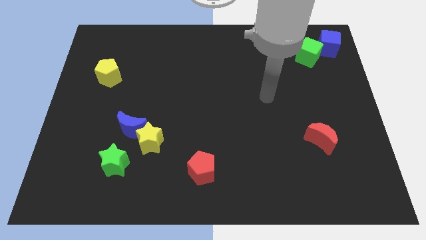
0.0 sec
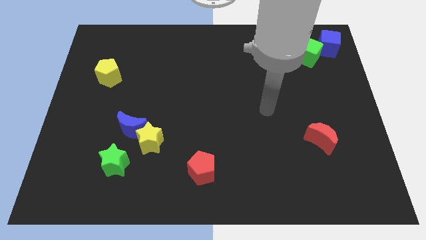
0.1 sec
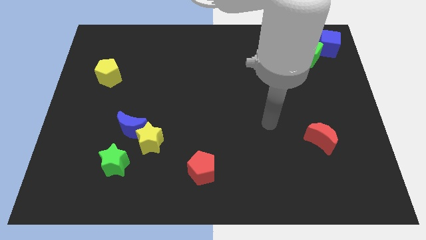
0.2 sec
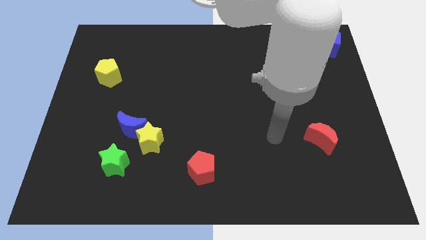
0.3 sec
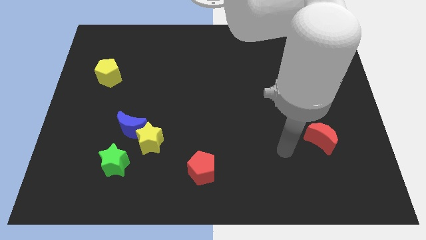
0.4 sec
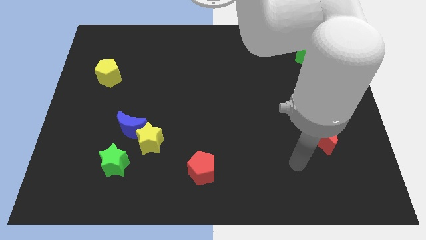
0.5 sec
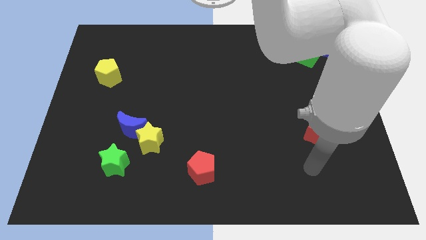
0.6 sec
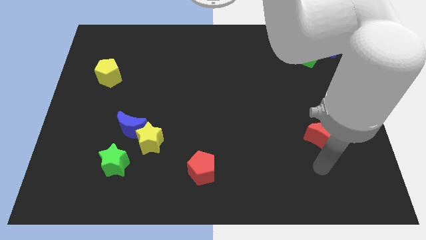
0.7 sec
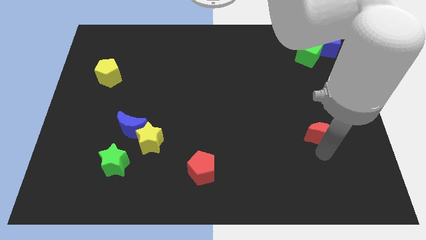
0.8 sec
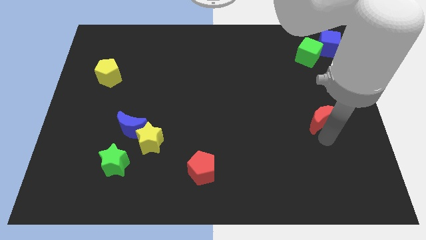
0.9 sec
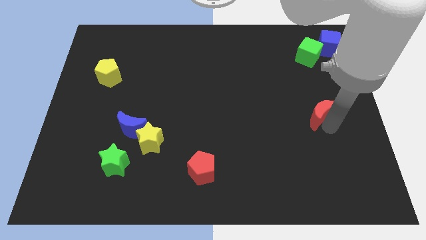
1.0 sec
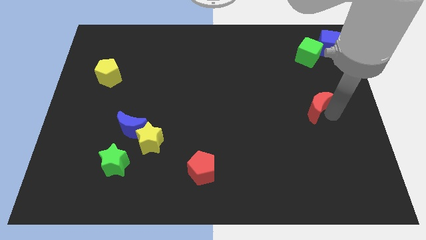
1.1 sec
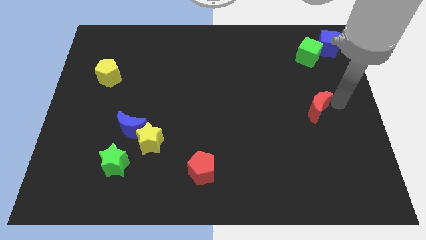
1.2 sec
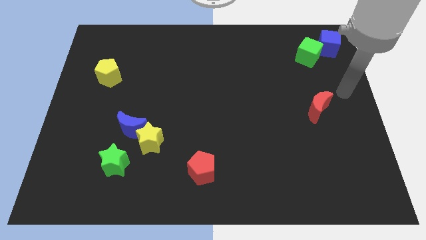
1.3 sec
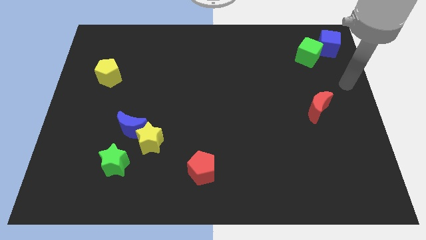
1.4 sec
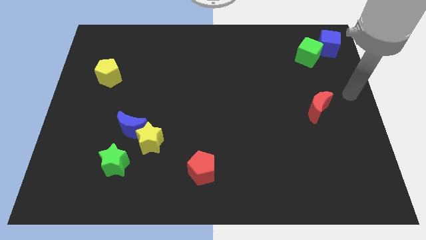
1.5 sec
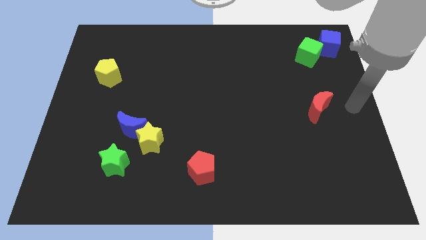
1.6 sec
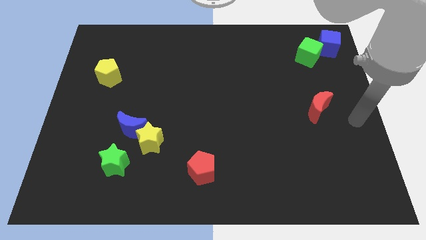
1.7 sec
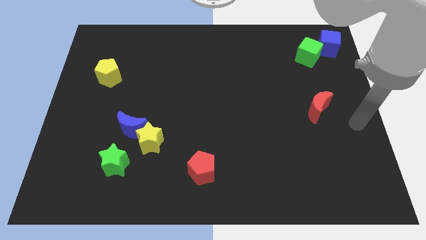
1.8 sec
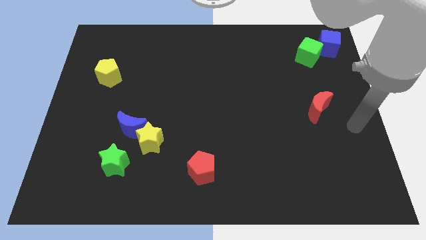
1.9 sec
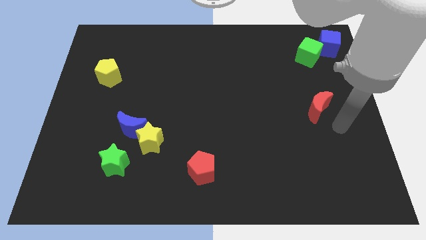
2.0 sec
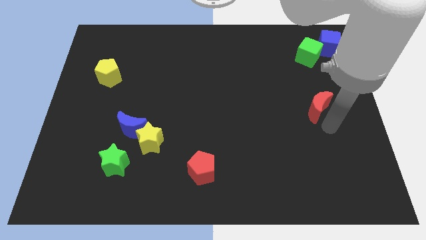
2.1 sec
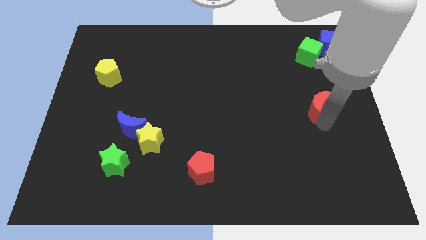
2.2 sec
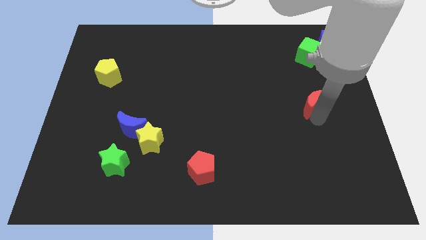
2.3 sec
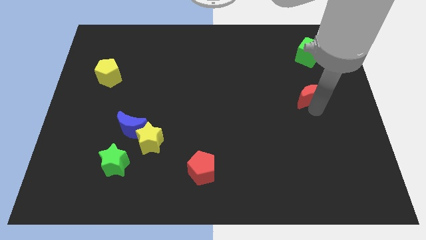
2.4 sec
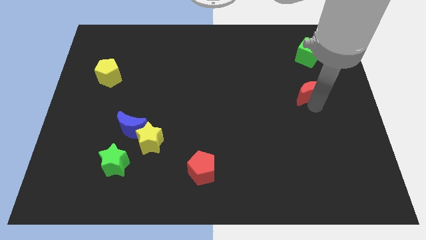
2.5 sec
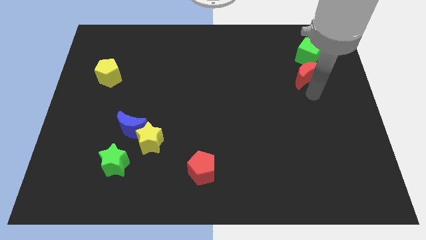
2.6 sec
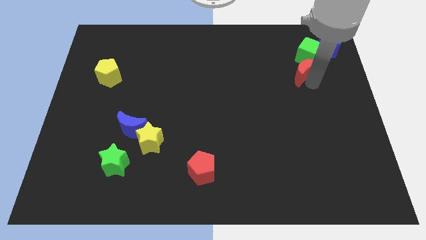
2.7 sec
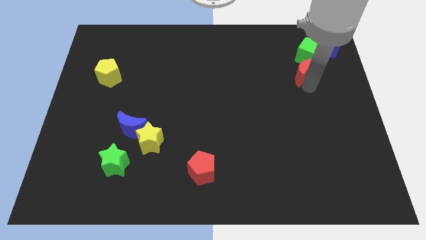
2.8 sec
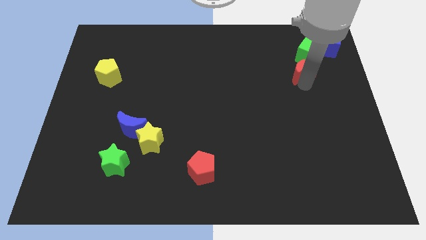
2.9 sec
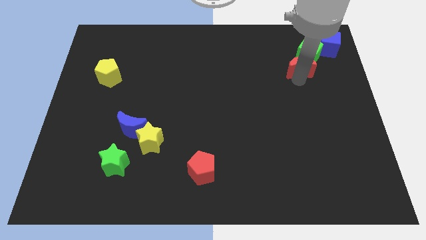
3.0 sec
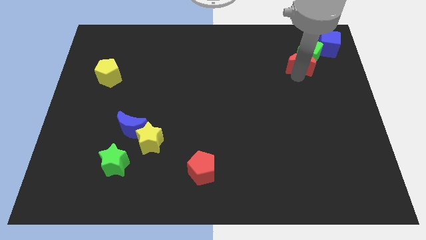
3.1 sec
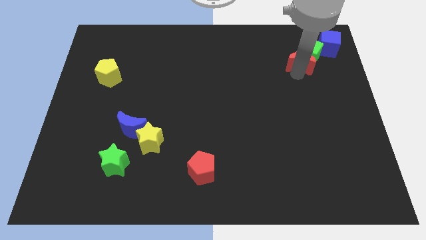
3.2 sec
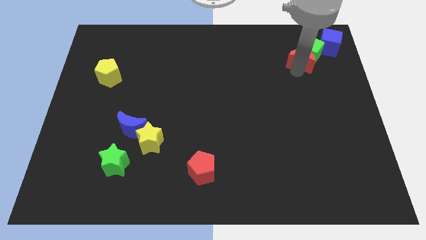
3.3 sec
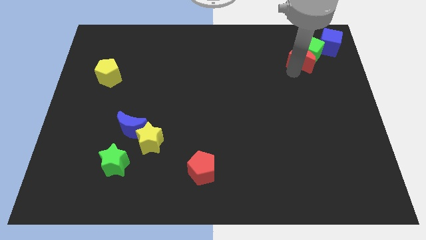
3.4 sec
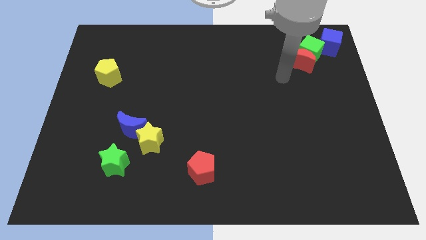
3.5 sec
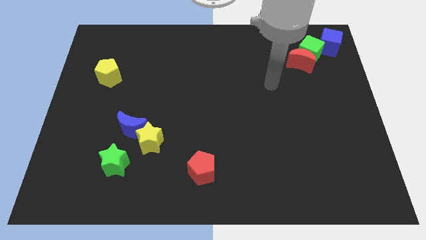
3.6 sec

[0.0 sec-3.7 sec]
push the red moon into the green cube

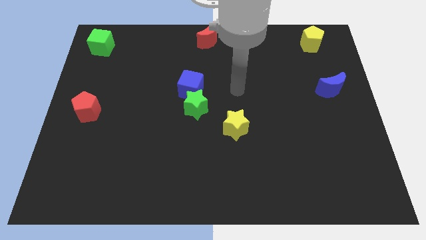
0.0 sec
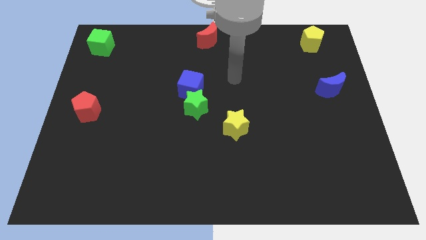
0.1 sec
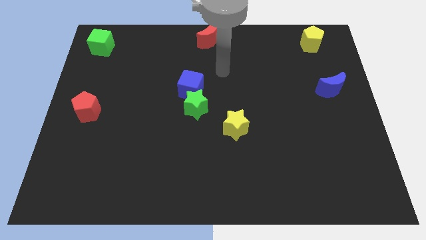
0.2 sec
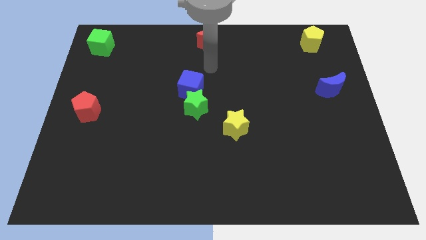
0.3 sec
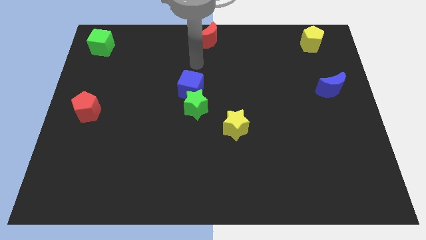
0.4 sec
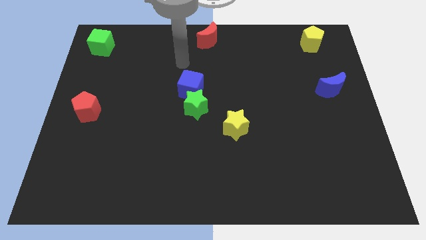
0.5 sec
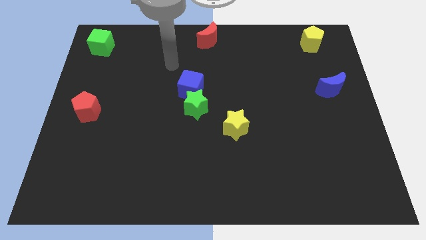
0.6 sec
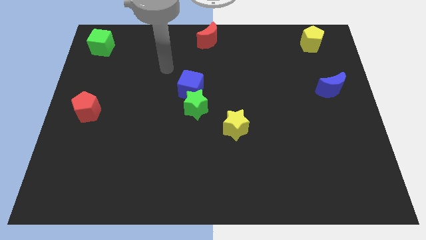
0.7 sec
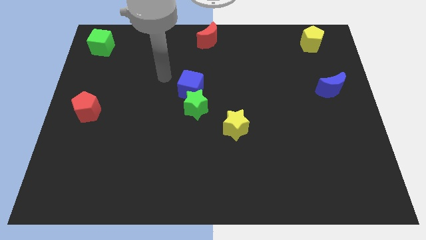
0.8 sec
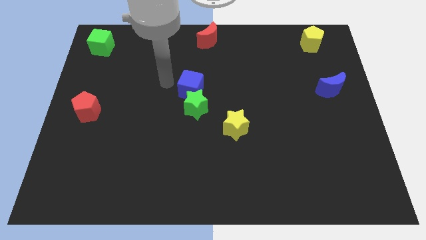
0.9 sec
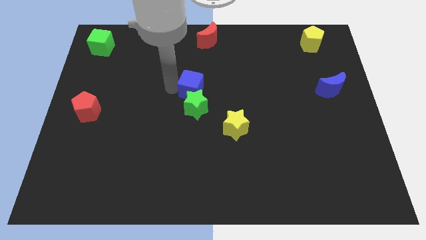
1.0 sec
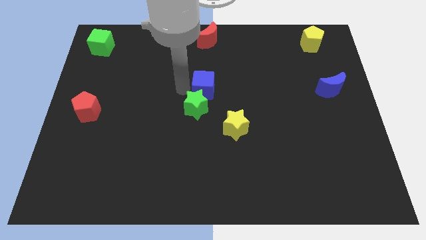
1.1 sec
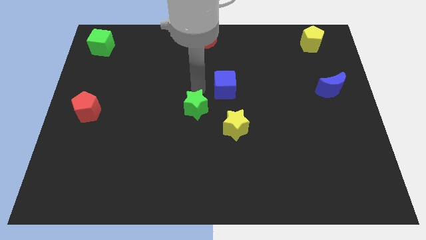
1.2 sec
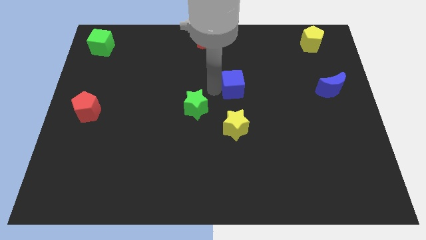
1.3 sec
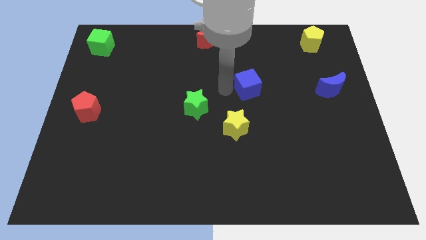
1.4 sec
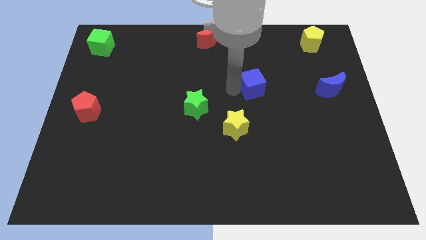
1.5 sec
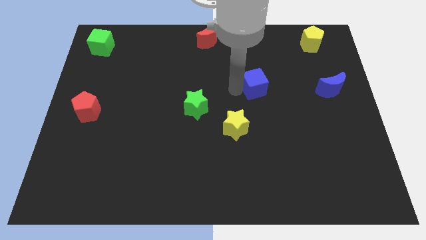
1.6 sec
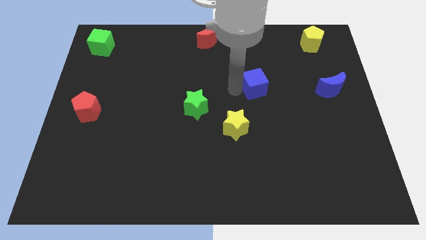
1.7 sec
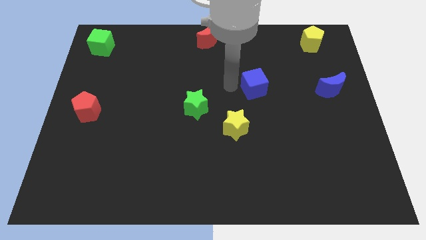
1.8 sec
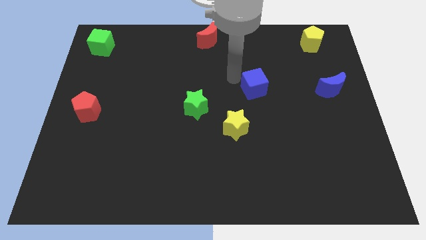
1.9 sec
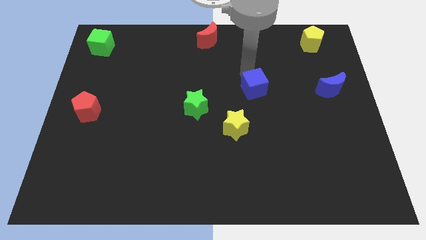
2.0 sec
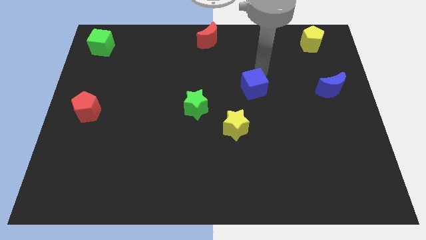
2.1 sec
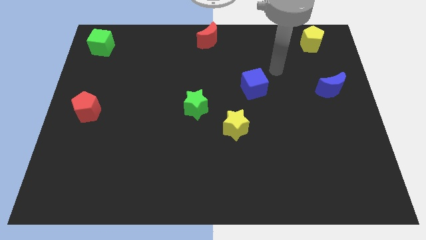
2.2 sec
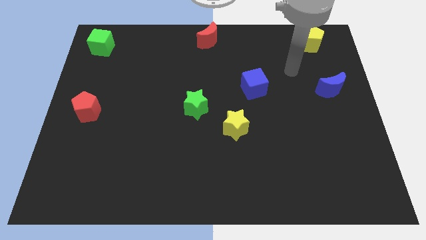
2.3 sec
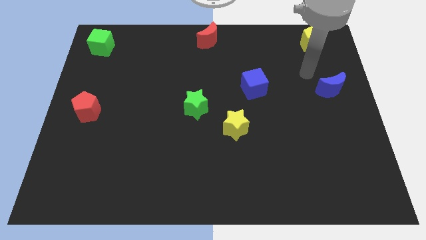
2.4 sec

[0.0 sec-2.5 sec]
push the blue cube towards the right side of the board

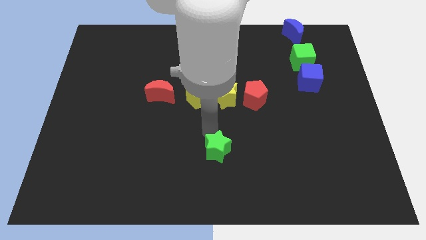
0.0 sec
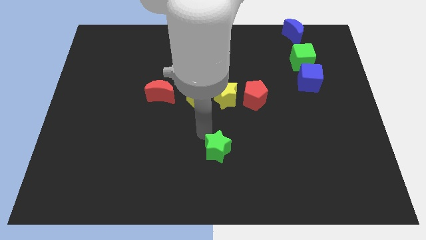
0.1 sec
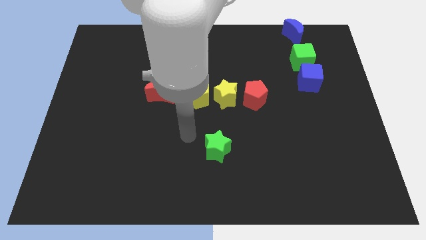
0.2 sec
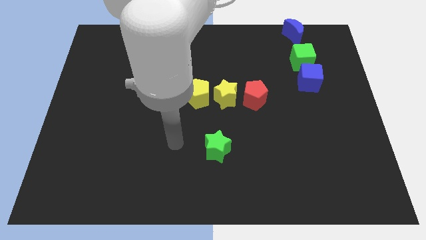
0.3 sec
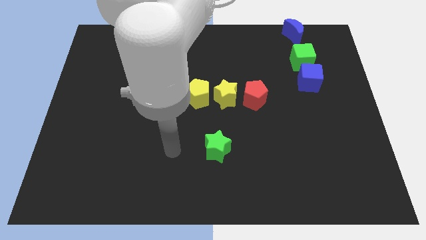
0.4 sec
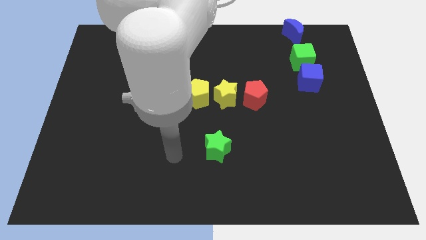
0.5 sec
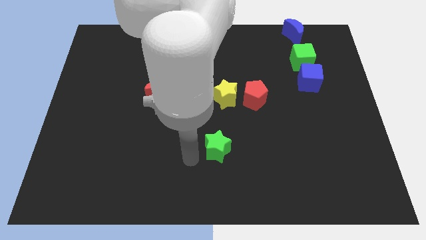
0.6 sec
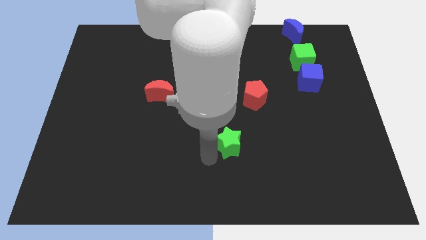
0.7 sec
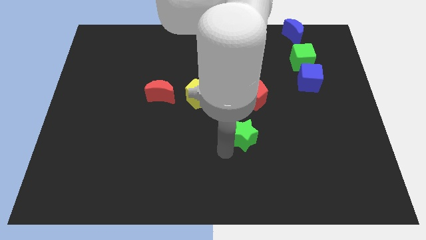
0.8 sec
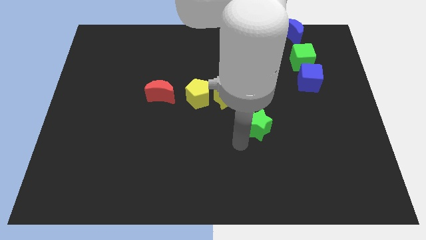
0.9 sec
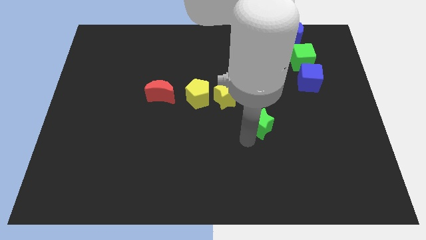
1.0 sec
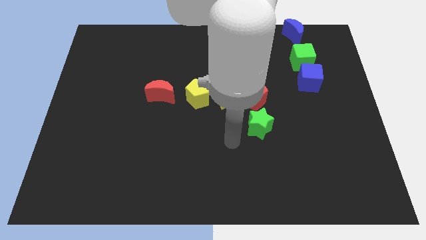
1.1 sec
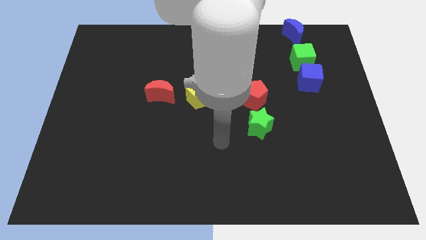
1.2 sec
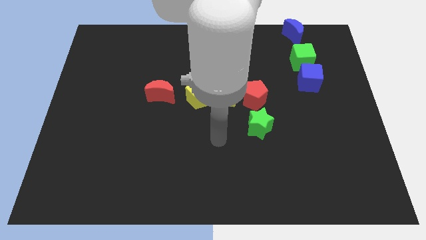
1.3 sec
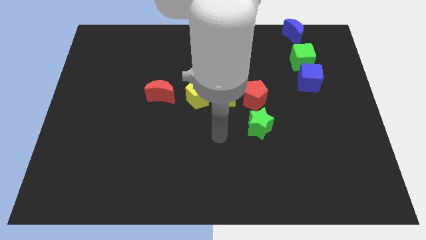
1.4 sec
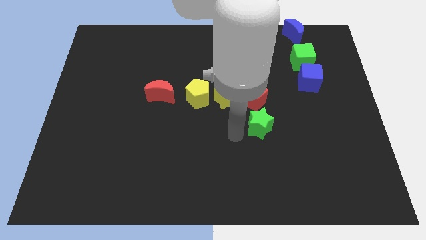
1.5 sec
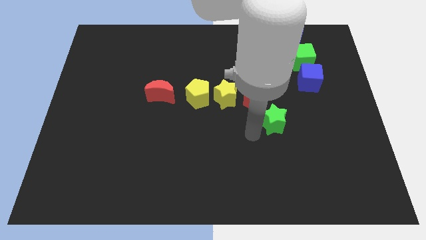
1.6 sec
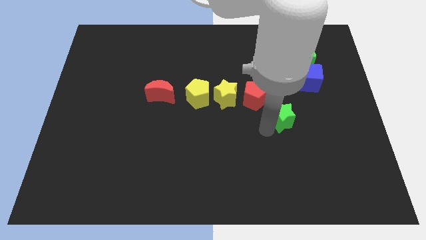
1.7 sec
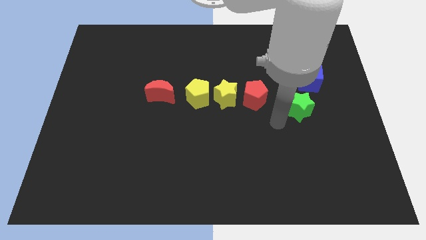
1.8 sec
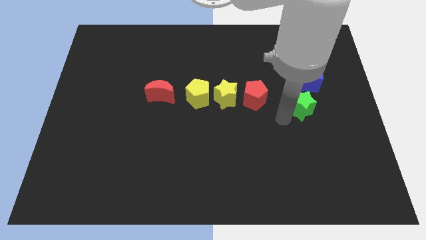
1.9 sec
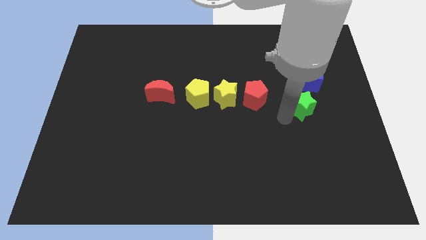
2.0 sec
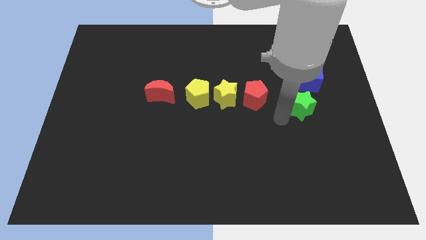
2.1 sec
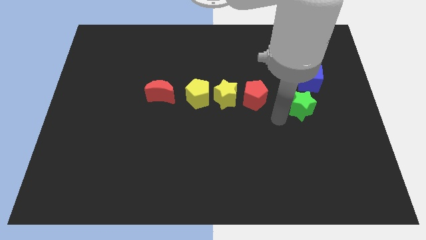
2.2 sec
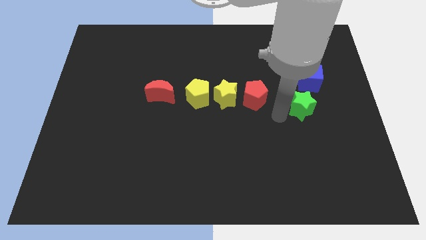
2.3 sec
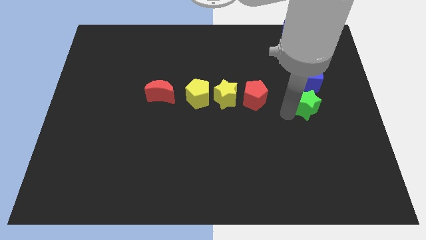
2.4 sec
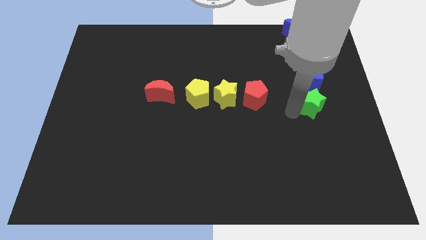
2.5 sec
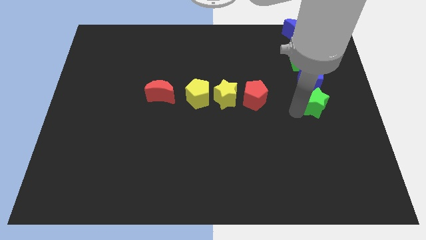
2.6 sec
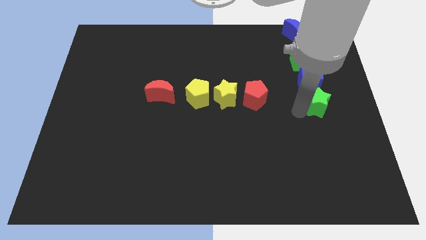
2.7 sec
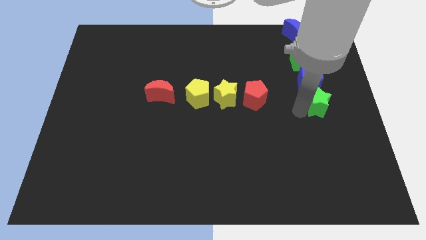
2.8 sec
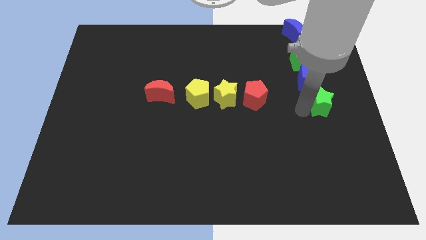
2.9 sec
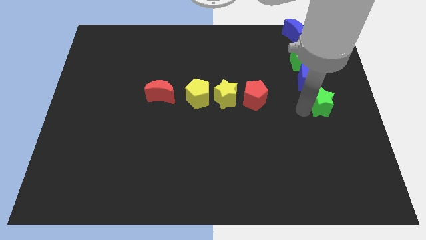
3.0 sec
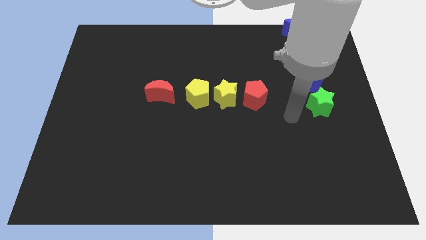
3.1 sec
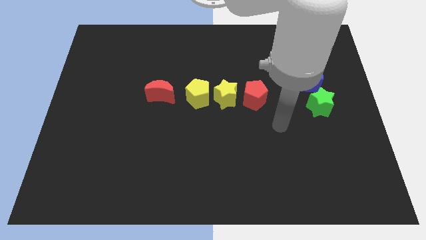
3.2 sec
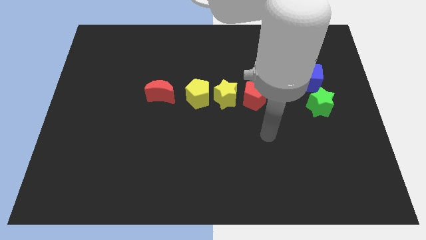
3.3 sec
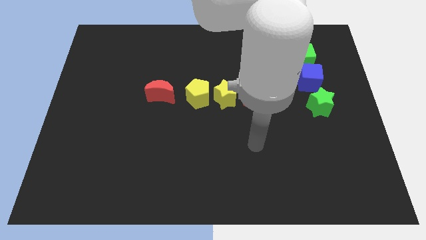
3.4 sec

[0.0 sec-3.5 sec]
place the green star below the blue cube
